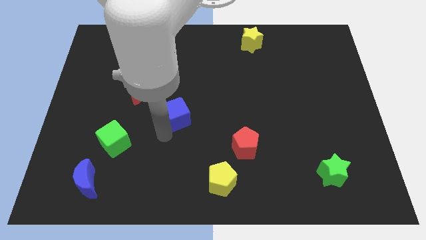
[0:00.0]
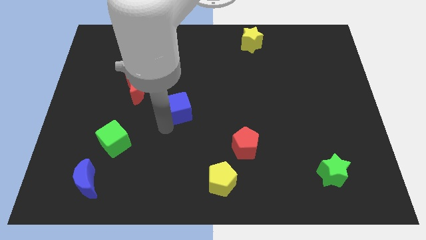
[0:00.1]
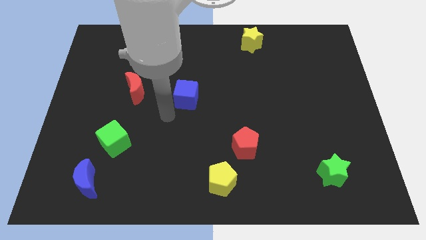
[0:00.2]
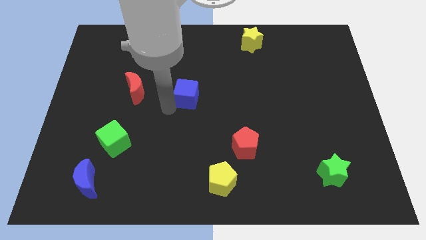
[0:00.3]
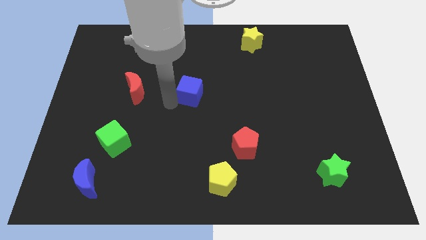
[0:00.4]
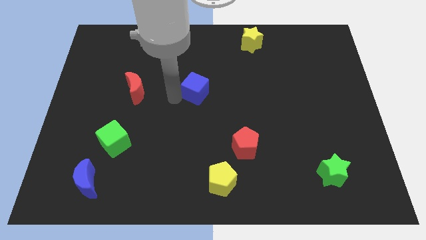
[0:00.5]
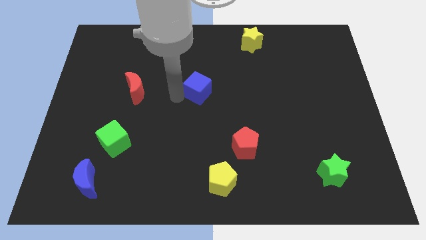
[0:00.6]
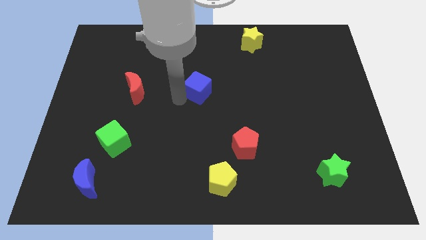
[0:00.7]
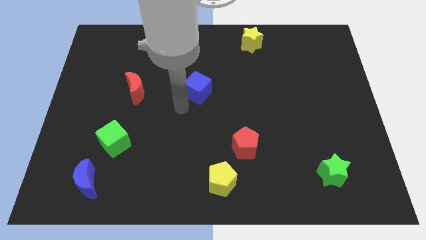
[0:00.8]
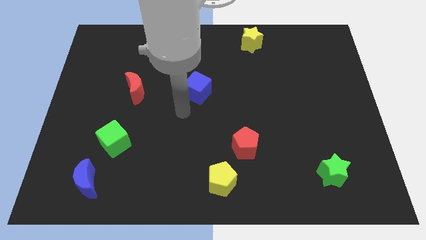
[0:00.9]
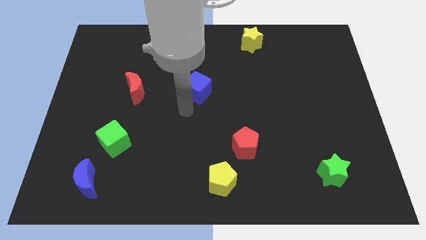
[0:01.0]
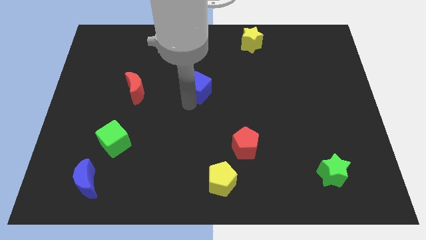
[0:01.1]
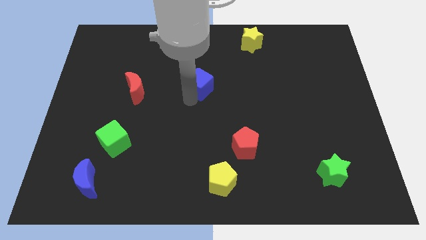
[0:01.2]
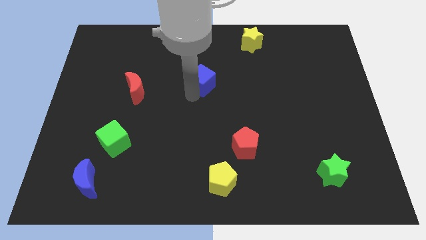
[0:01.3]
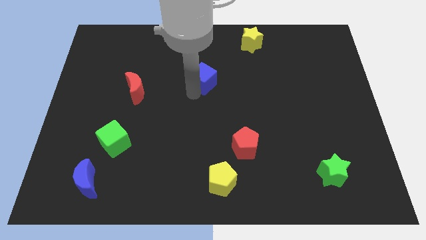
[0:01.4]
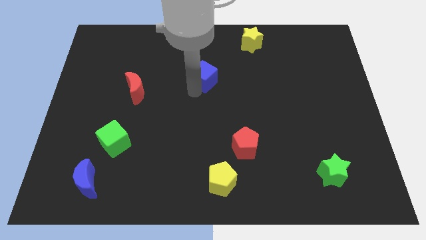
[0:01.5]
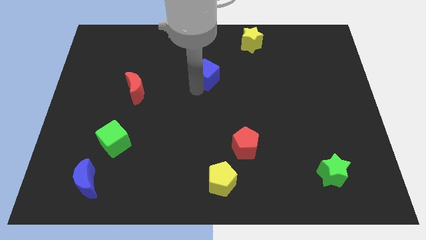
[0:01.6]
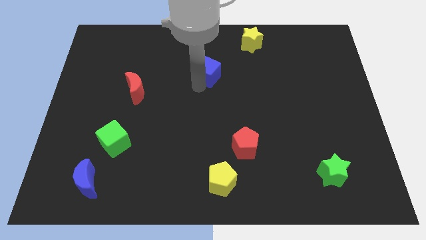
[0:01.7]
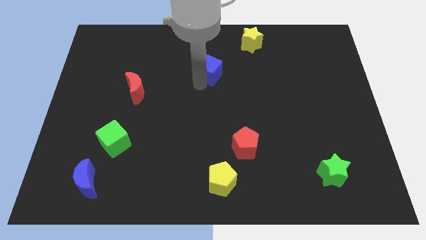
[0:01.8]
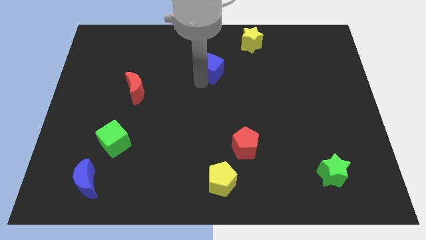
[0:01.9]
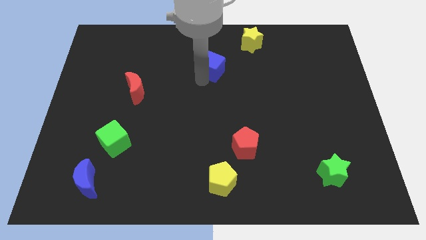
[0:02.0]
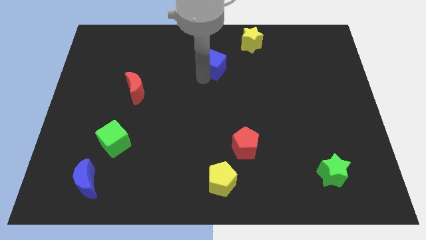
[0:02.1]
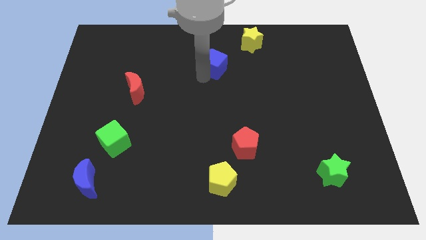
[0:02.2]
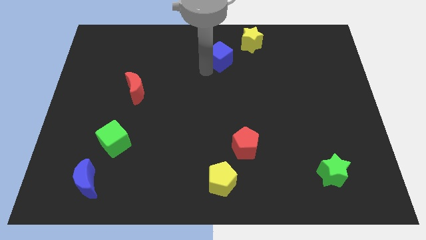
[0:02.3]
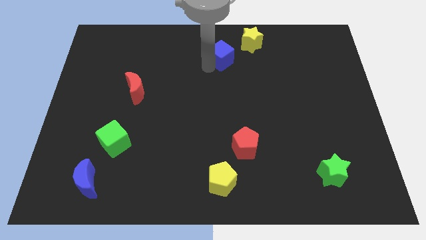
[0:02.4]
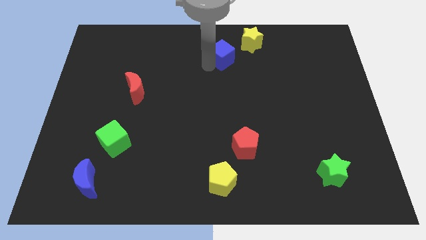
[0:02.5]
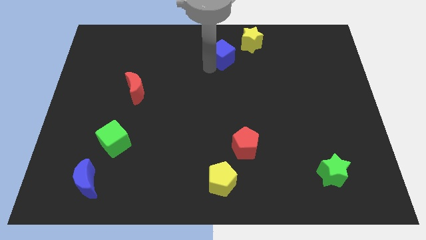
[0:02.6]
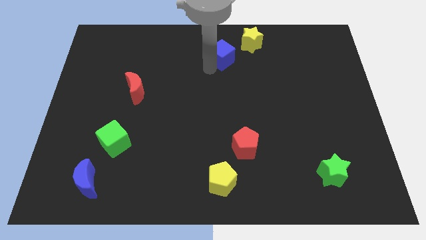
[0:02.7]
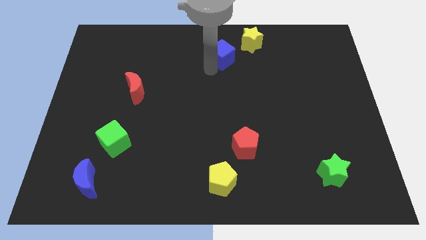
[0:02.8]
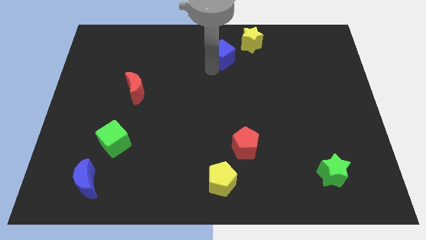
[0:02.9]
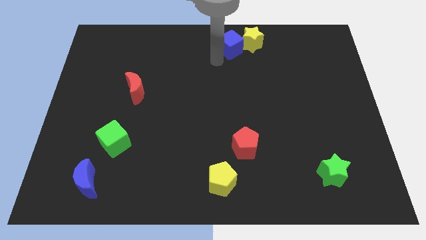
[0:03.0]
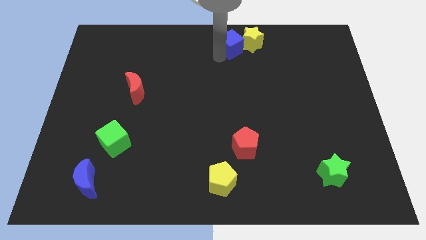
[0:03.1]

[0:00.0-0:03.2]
move the blue cube into the left side of the yelloow star

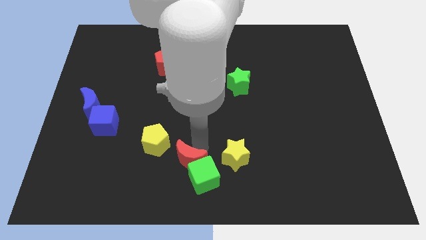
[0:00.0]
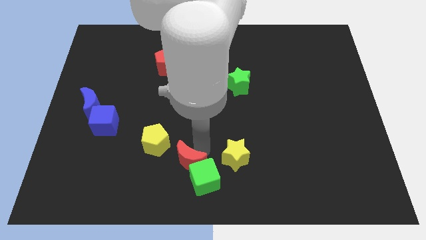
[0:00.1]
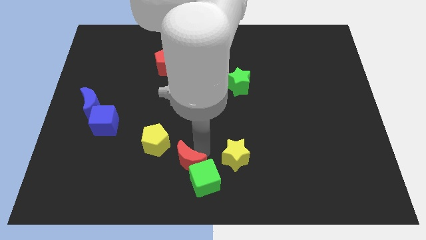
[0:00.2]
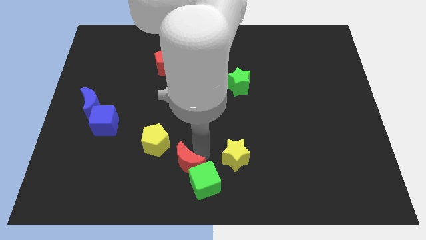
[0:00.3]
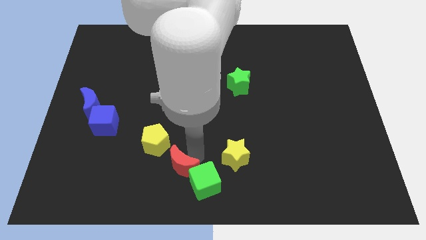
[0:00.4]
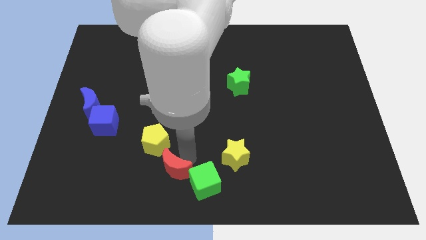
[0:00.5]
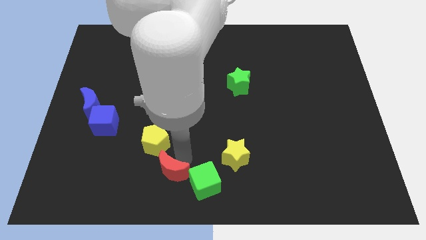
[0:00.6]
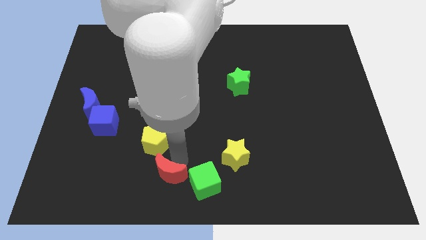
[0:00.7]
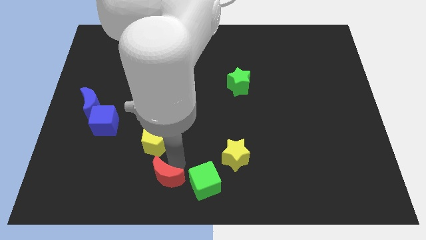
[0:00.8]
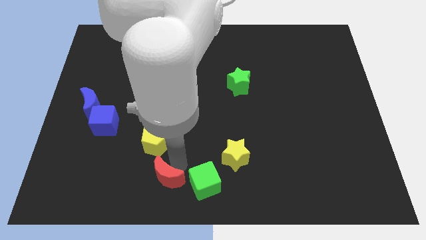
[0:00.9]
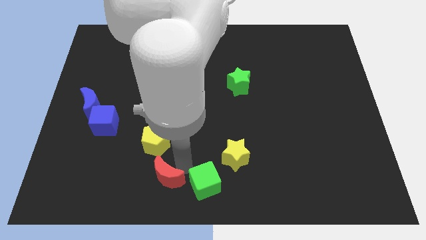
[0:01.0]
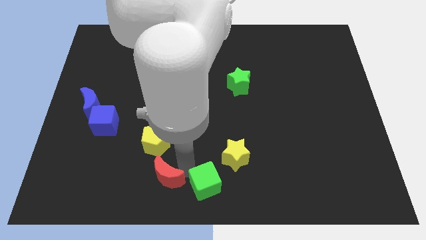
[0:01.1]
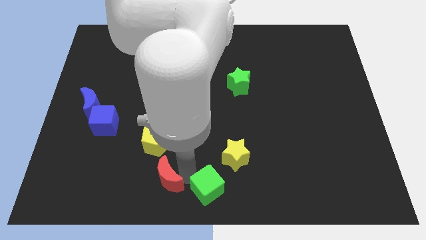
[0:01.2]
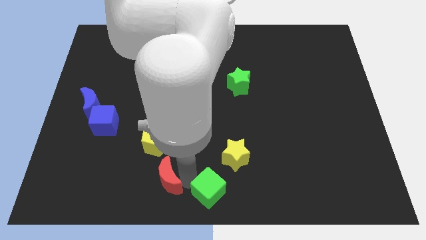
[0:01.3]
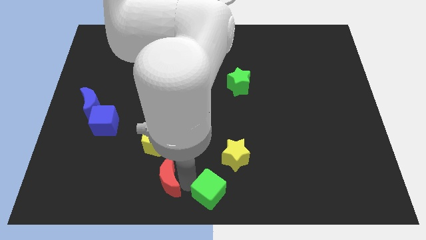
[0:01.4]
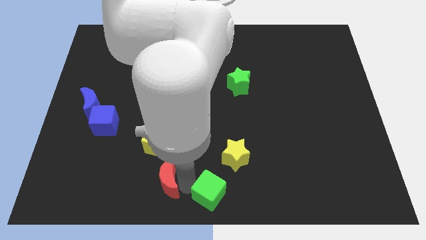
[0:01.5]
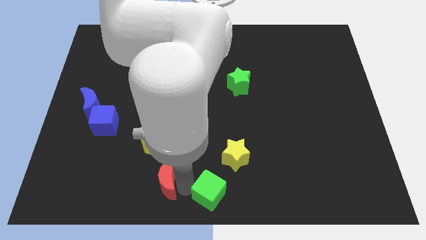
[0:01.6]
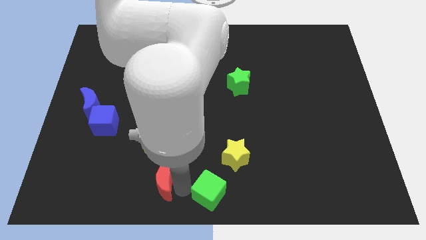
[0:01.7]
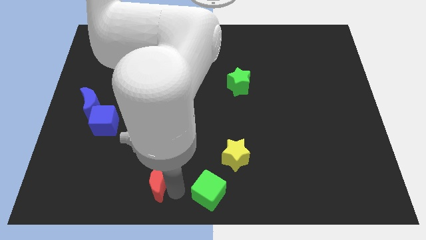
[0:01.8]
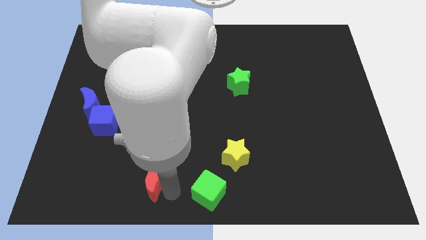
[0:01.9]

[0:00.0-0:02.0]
push red crescent below yellow pentagon

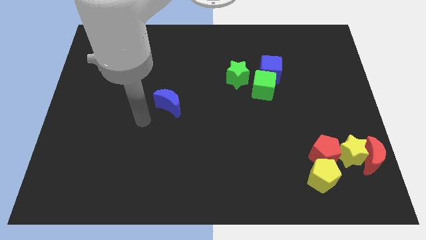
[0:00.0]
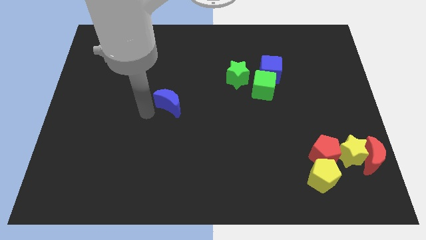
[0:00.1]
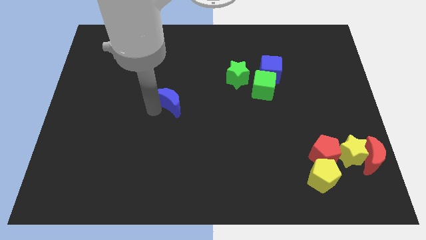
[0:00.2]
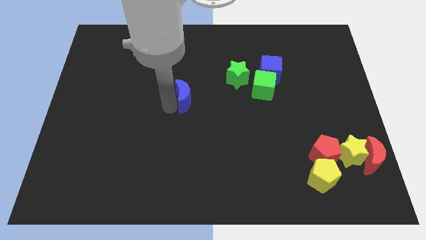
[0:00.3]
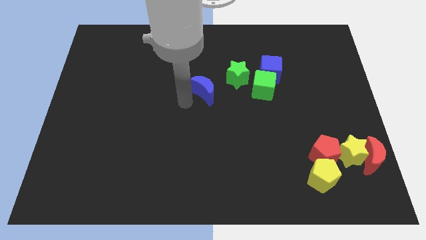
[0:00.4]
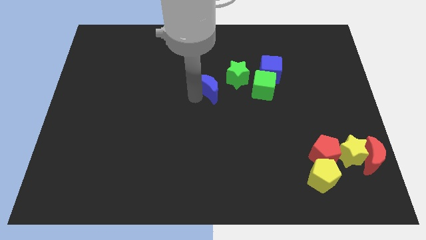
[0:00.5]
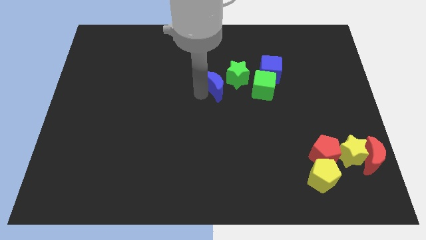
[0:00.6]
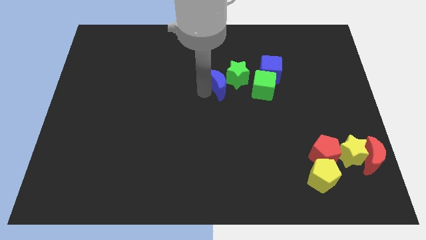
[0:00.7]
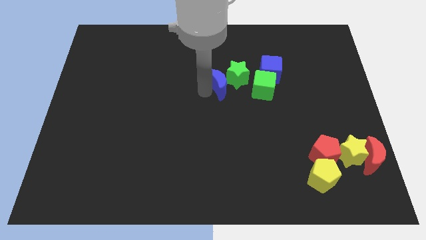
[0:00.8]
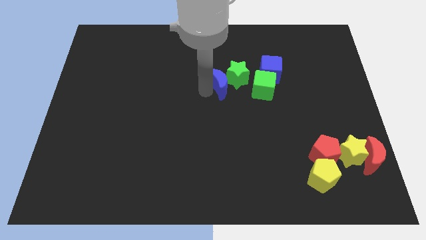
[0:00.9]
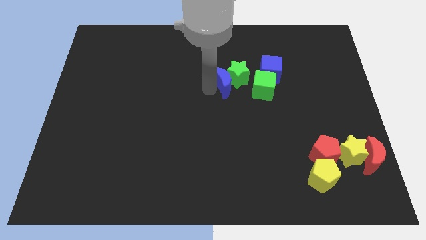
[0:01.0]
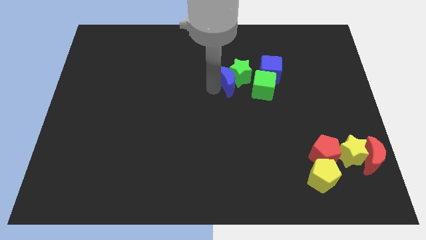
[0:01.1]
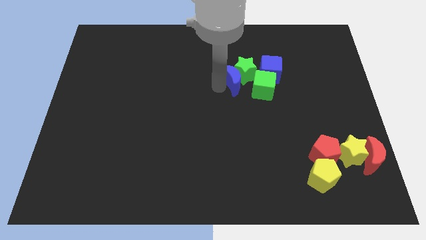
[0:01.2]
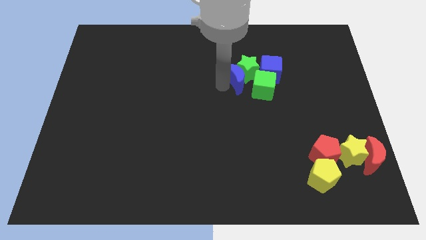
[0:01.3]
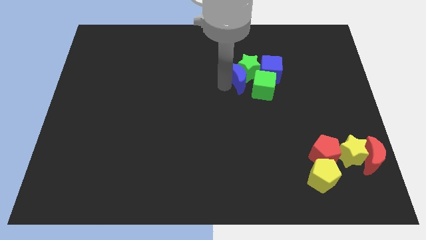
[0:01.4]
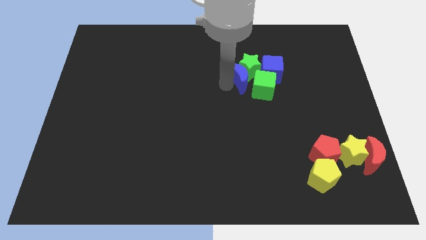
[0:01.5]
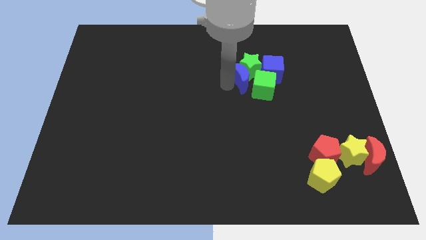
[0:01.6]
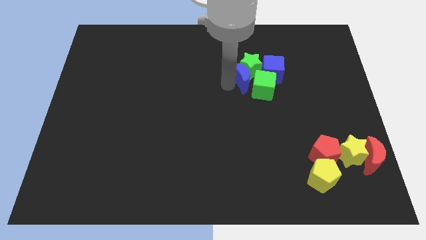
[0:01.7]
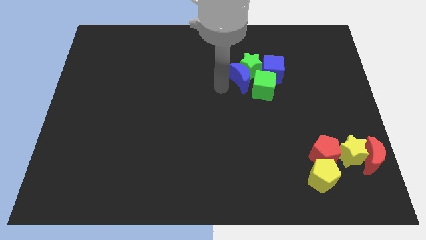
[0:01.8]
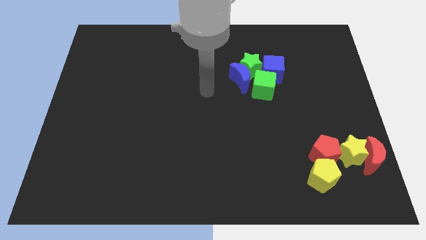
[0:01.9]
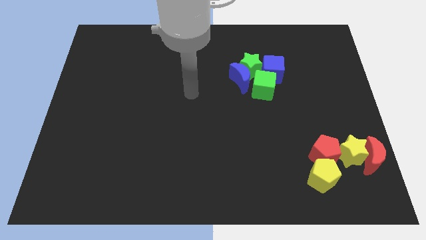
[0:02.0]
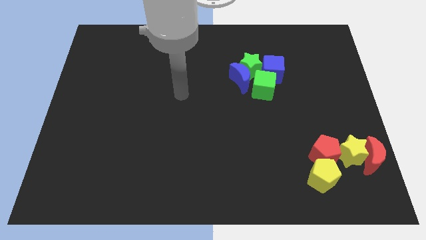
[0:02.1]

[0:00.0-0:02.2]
push the blue moon towards the green blocks

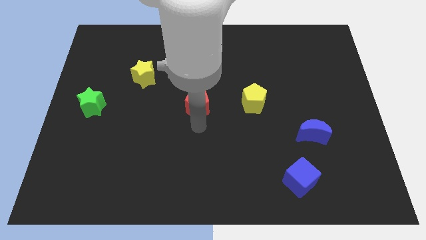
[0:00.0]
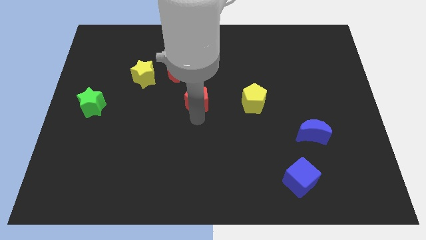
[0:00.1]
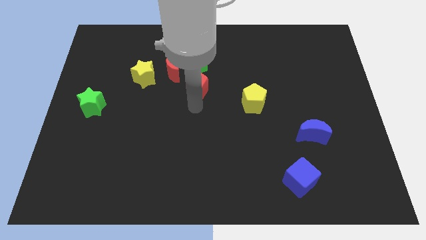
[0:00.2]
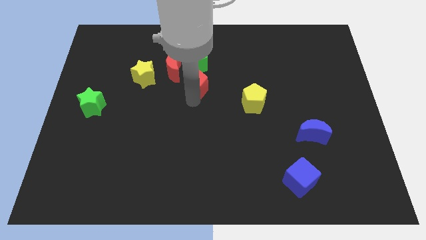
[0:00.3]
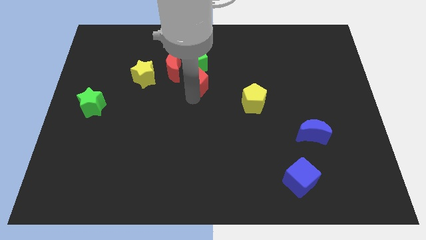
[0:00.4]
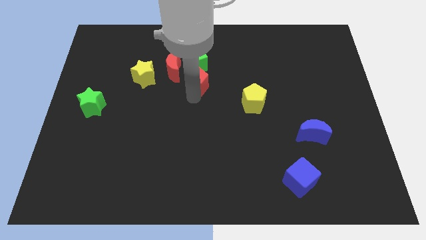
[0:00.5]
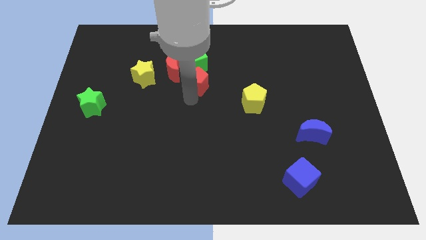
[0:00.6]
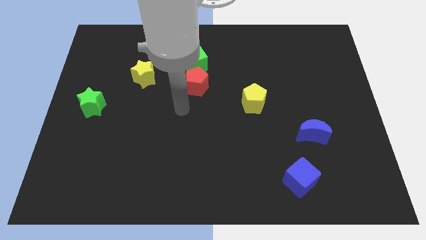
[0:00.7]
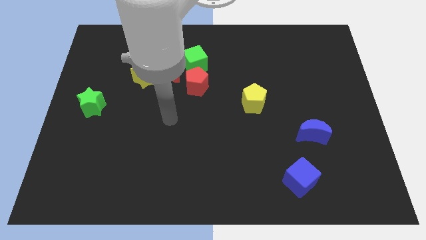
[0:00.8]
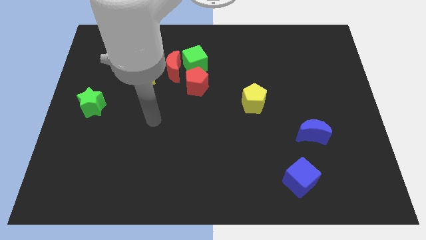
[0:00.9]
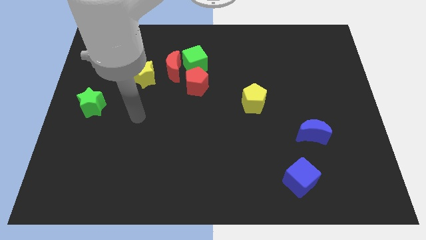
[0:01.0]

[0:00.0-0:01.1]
move red pentagon towards green cube

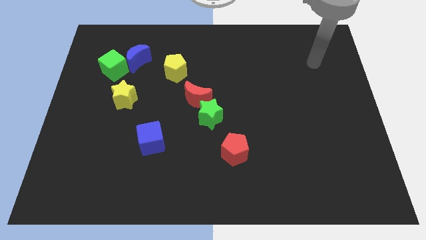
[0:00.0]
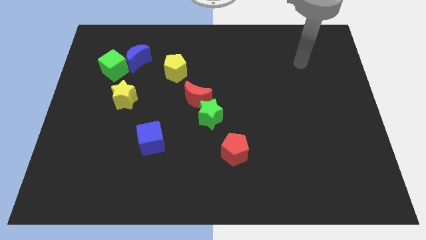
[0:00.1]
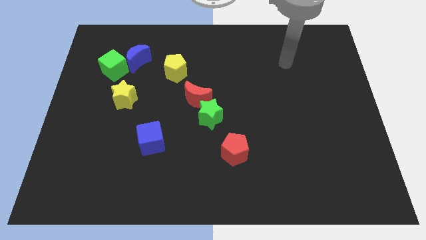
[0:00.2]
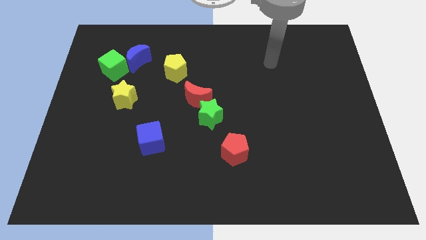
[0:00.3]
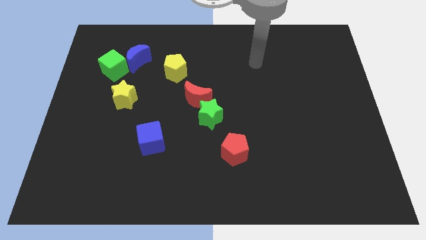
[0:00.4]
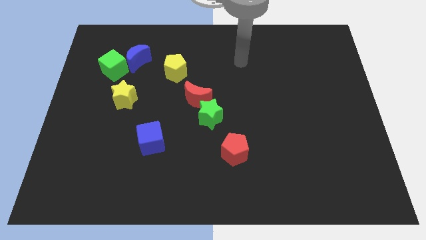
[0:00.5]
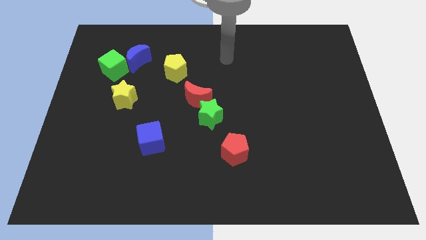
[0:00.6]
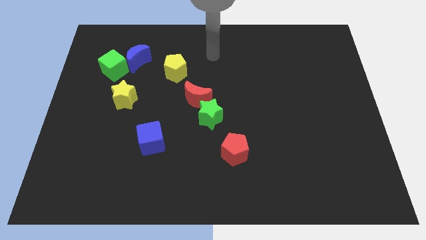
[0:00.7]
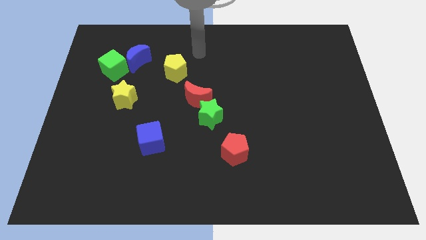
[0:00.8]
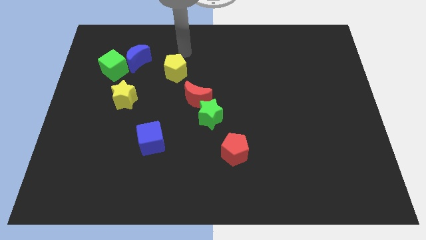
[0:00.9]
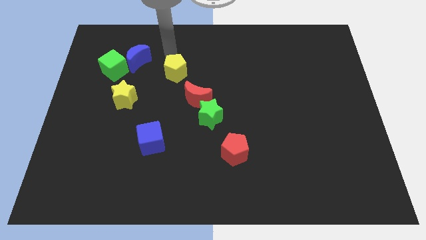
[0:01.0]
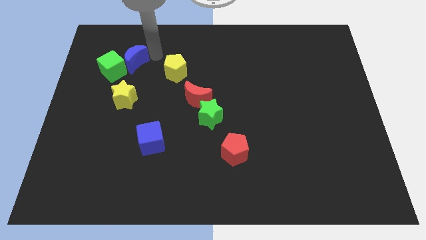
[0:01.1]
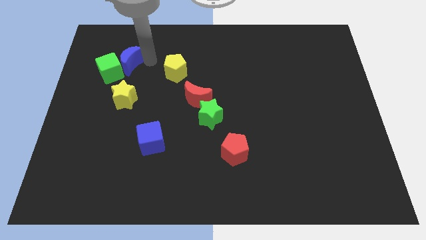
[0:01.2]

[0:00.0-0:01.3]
push the blue crescent into the green cube
